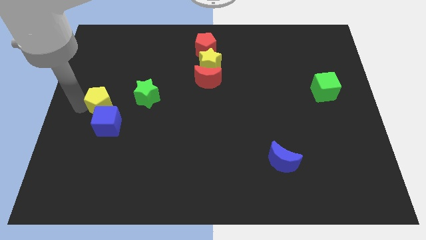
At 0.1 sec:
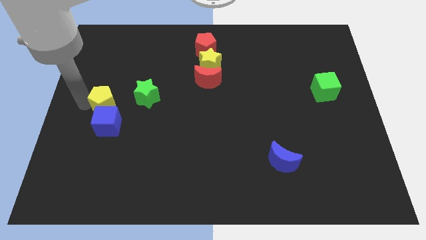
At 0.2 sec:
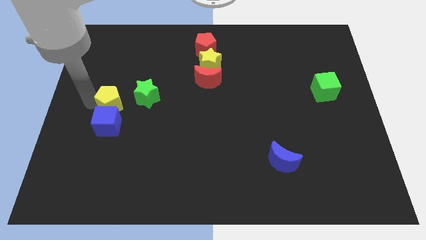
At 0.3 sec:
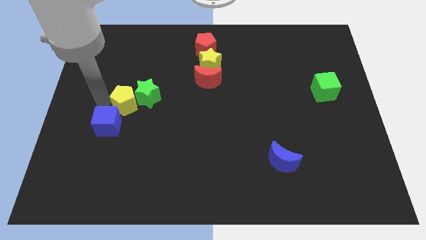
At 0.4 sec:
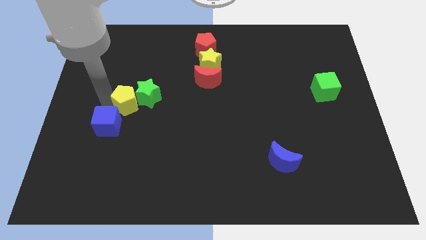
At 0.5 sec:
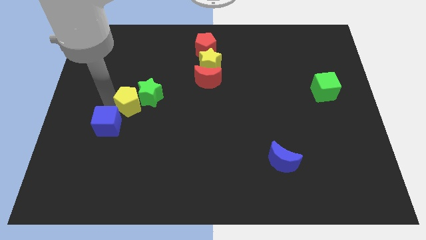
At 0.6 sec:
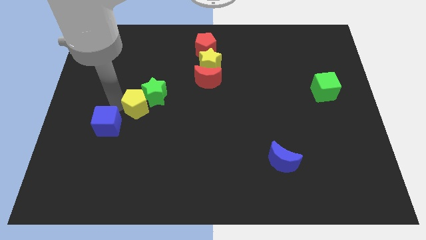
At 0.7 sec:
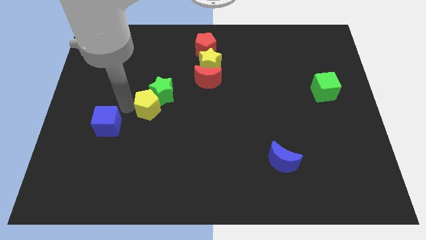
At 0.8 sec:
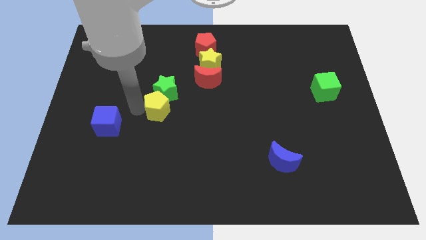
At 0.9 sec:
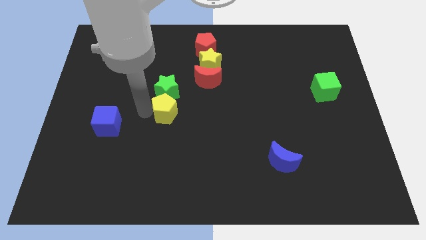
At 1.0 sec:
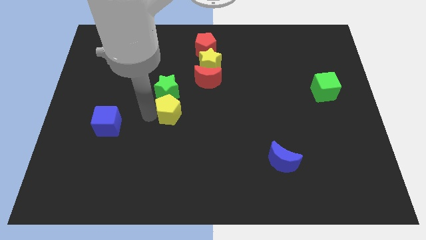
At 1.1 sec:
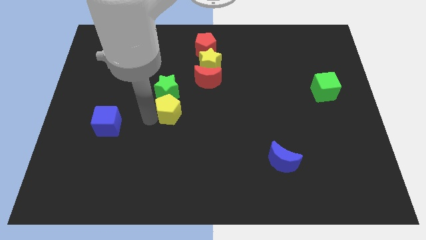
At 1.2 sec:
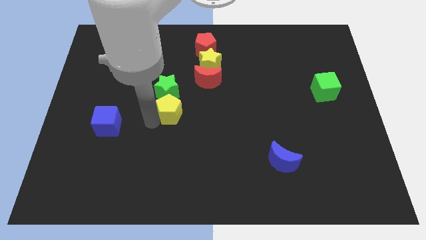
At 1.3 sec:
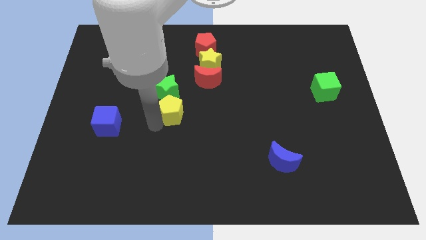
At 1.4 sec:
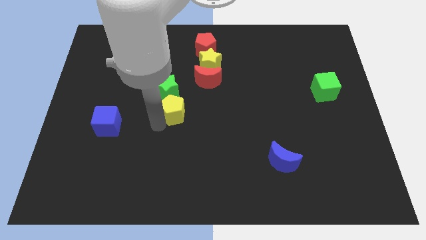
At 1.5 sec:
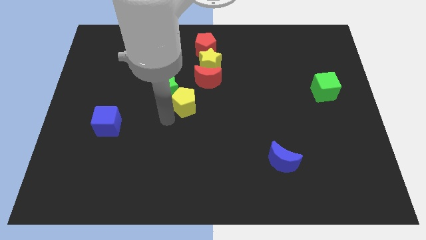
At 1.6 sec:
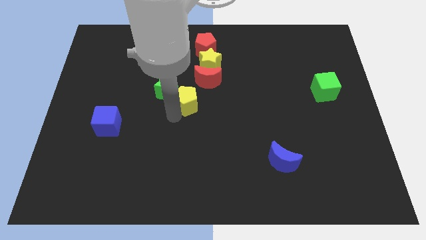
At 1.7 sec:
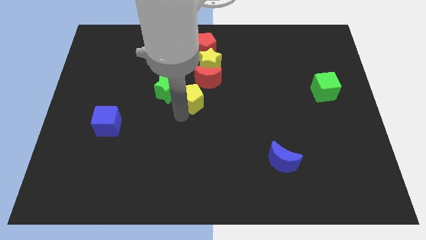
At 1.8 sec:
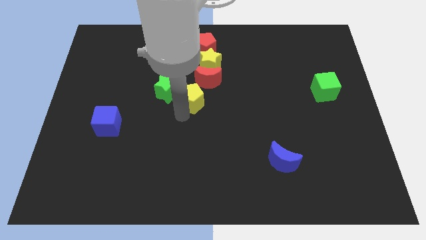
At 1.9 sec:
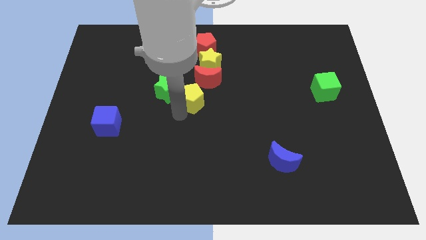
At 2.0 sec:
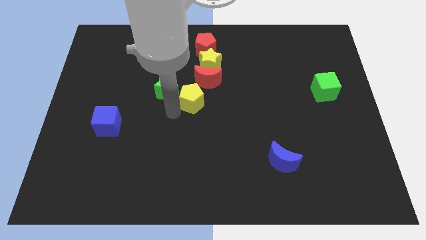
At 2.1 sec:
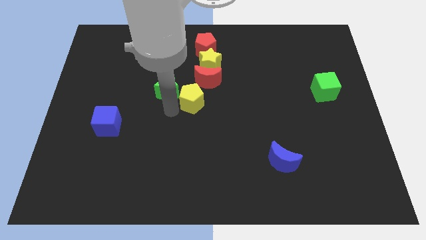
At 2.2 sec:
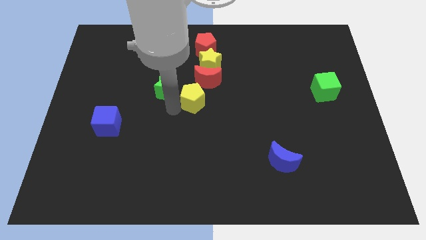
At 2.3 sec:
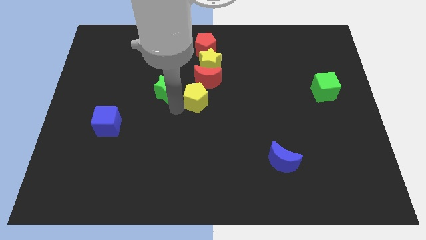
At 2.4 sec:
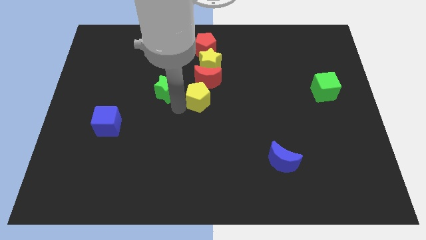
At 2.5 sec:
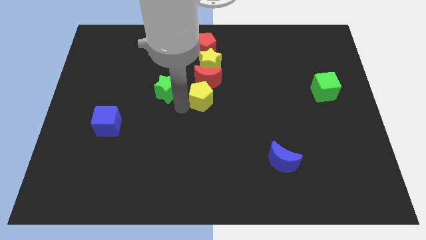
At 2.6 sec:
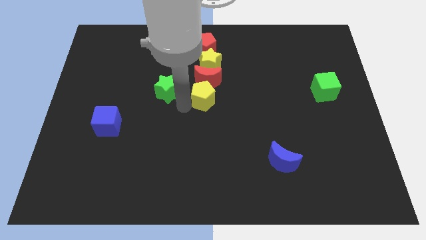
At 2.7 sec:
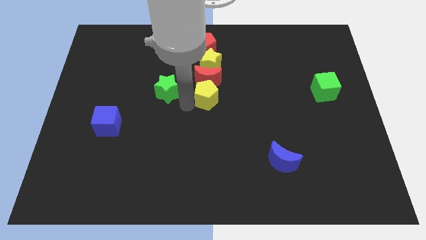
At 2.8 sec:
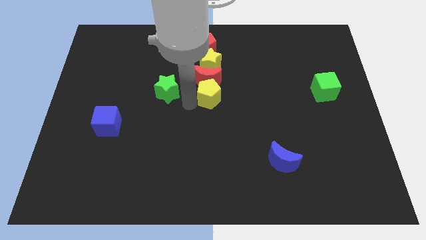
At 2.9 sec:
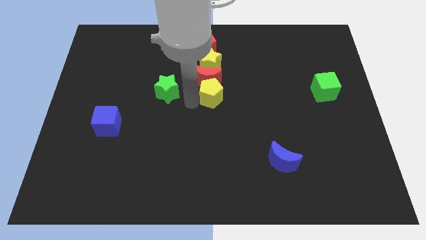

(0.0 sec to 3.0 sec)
drag the yellow pentagon to the bottom side of the red moon

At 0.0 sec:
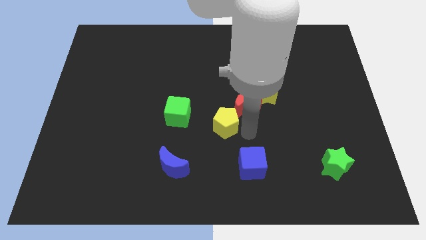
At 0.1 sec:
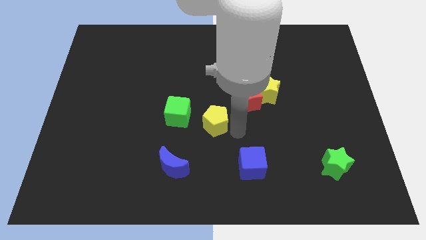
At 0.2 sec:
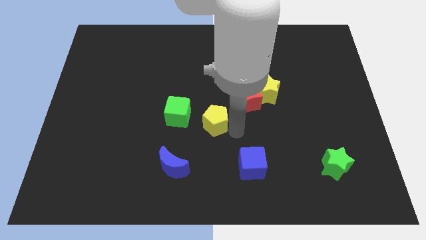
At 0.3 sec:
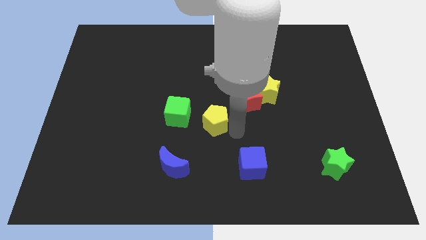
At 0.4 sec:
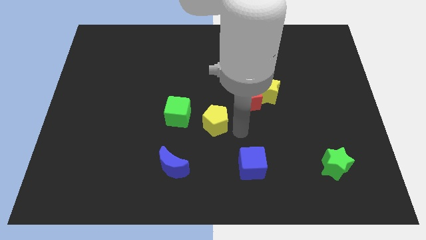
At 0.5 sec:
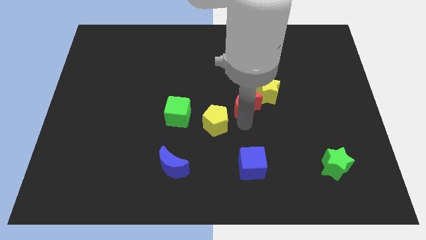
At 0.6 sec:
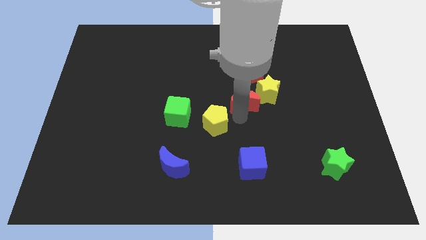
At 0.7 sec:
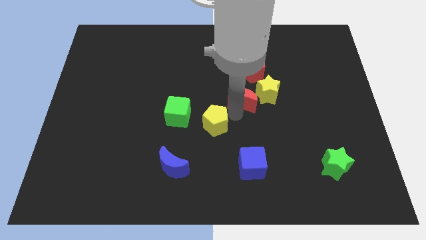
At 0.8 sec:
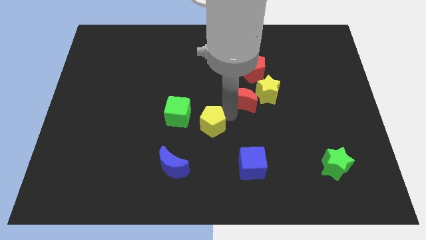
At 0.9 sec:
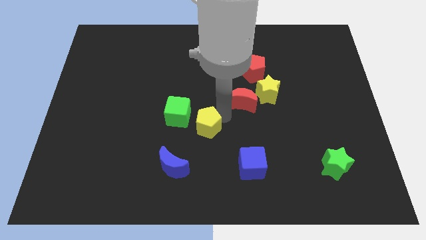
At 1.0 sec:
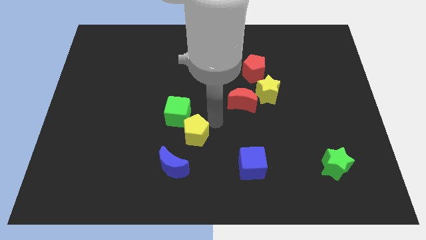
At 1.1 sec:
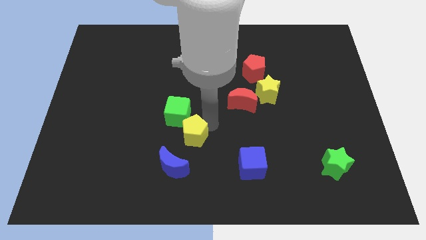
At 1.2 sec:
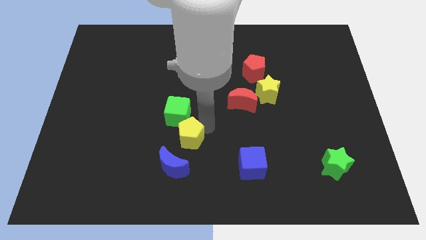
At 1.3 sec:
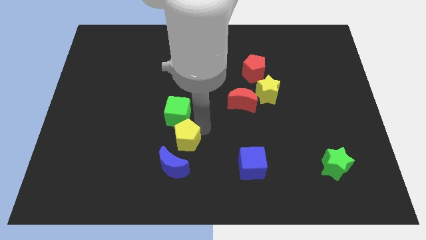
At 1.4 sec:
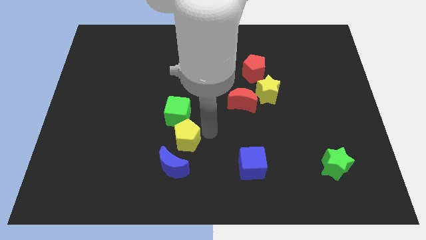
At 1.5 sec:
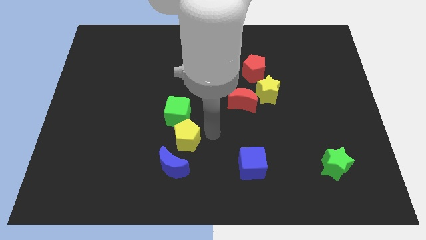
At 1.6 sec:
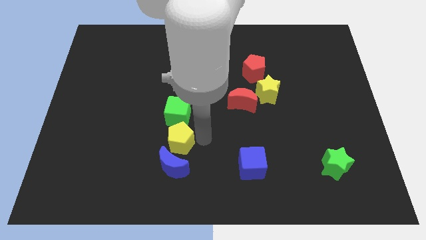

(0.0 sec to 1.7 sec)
move the yellow pentagon below the green cube

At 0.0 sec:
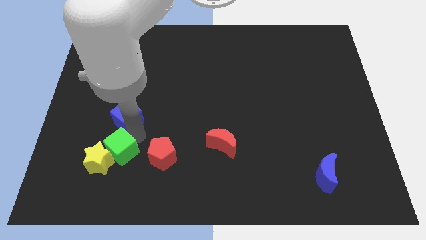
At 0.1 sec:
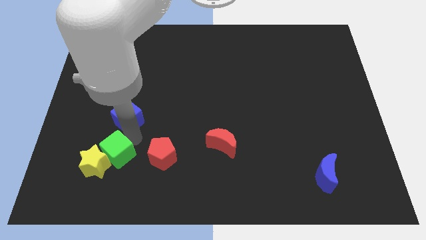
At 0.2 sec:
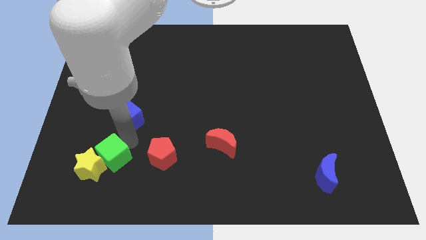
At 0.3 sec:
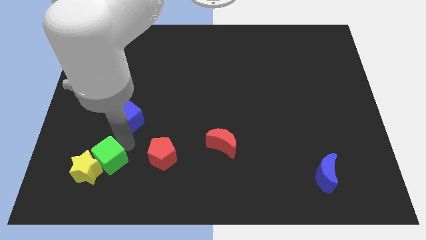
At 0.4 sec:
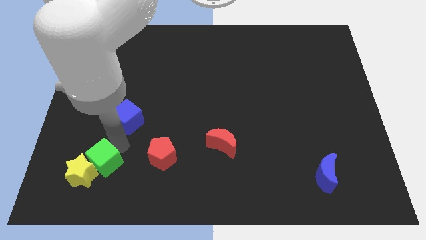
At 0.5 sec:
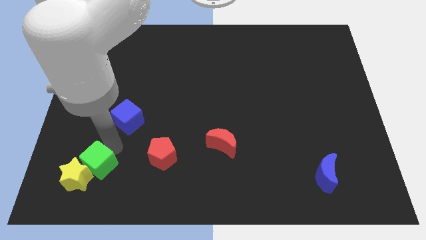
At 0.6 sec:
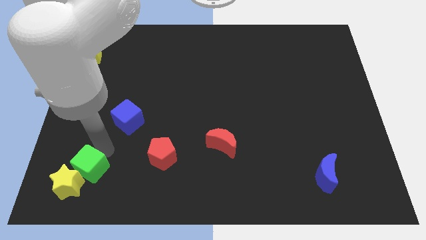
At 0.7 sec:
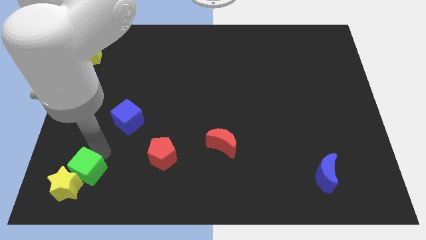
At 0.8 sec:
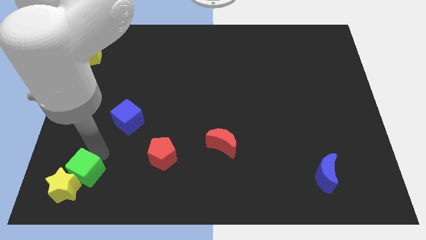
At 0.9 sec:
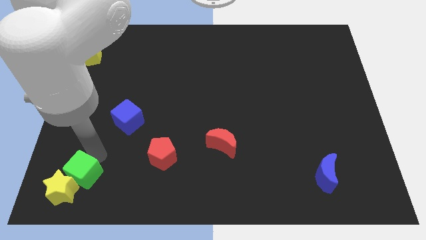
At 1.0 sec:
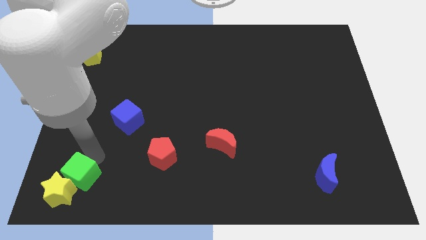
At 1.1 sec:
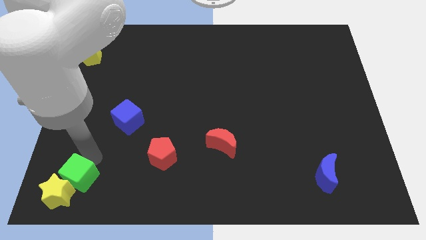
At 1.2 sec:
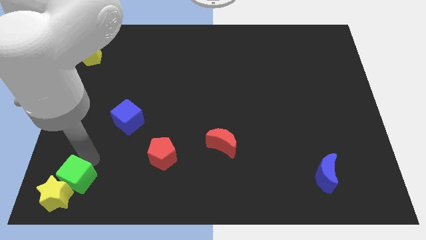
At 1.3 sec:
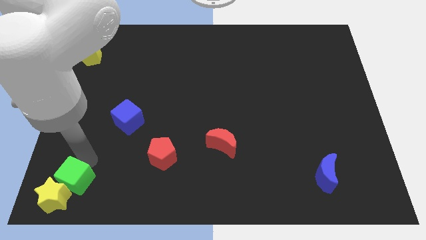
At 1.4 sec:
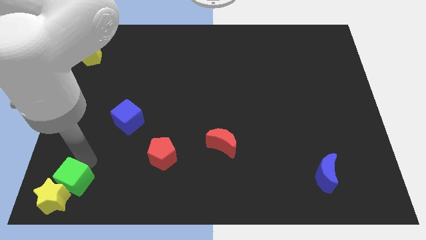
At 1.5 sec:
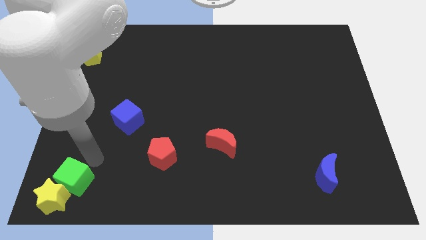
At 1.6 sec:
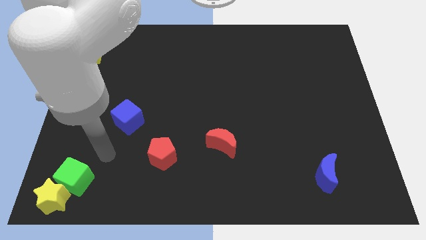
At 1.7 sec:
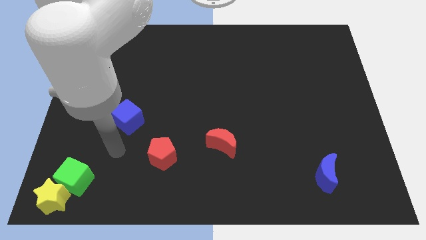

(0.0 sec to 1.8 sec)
move green cube and yellow star towards left bottom corner of the board

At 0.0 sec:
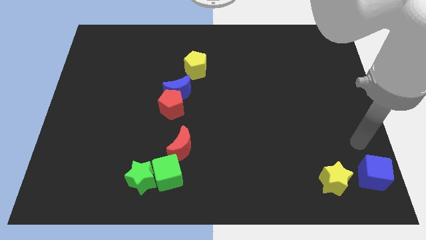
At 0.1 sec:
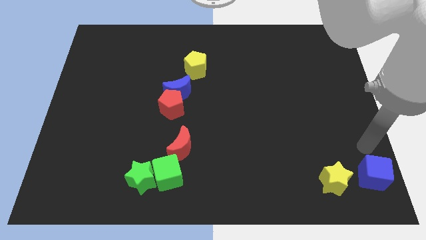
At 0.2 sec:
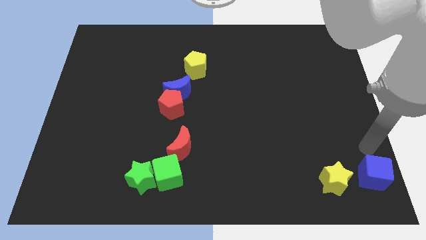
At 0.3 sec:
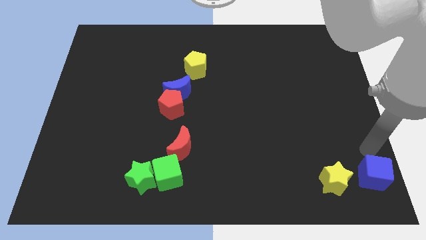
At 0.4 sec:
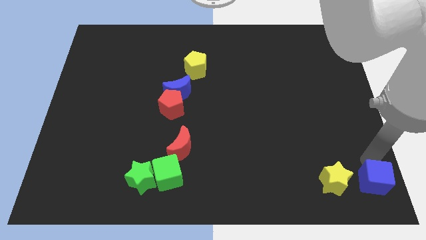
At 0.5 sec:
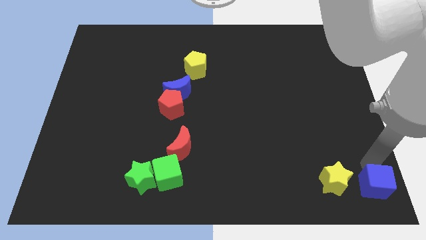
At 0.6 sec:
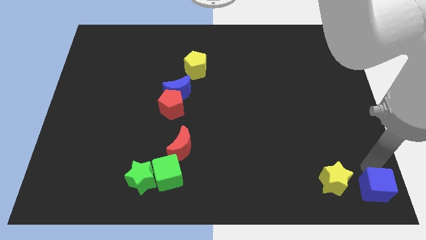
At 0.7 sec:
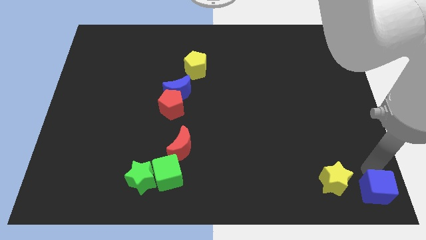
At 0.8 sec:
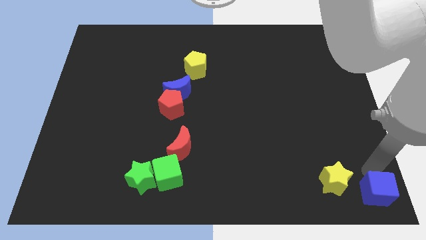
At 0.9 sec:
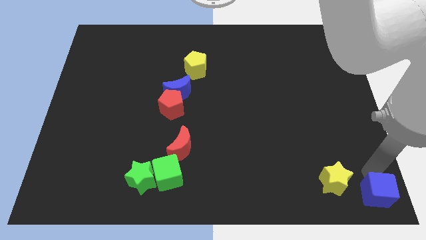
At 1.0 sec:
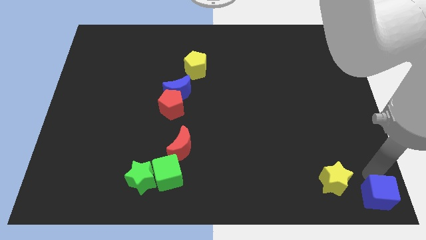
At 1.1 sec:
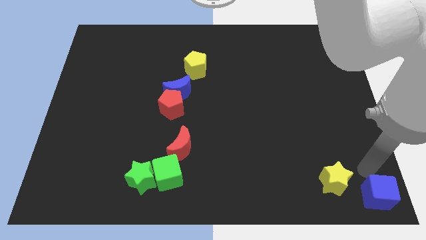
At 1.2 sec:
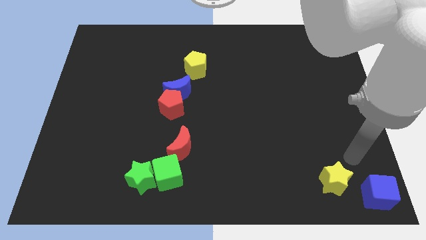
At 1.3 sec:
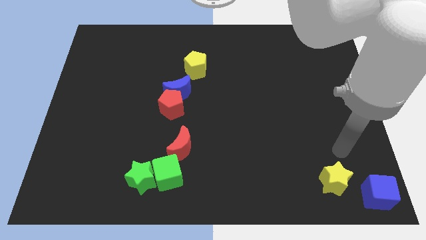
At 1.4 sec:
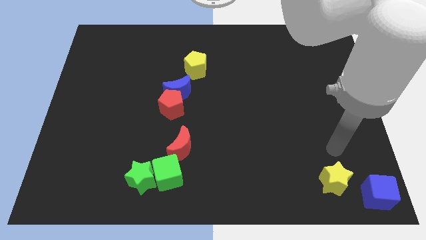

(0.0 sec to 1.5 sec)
push the blue cube to the bottom right corner of the board

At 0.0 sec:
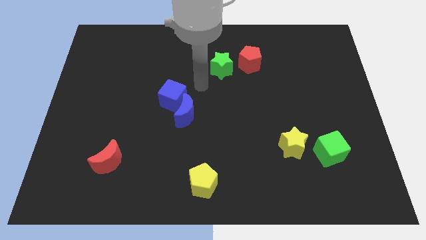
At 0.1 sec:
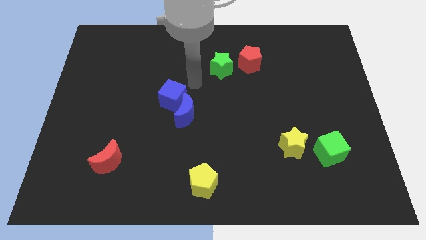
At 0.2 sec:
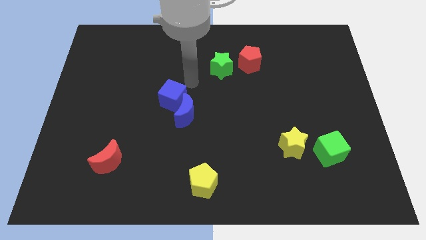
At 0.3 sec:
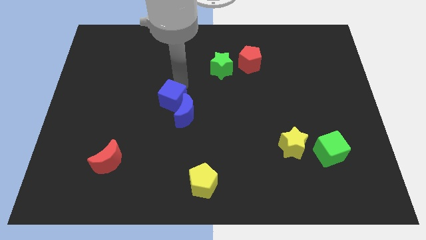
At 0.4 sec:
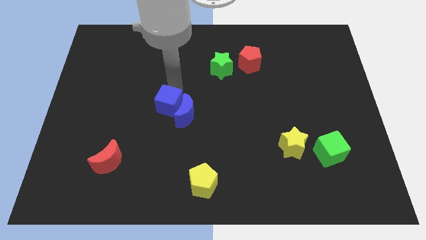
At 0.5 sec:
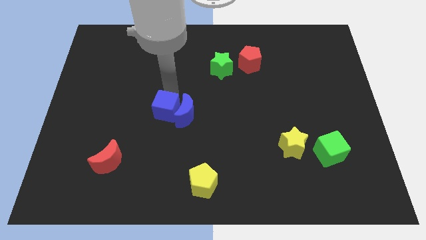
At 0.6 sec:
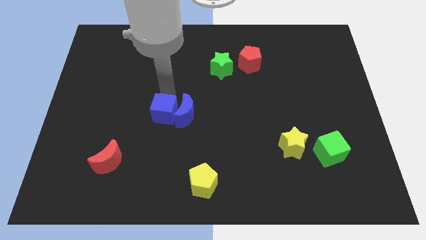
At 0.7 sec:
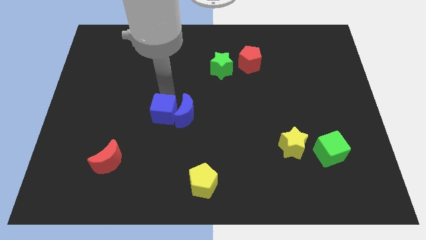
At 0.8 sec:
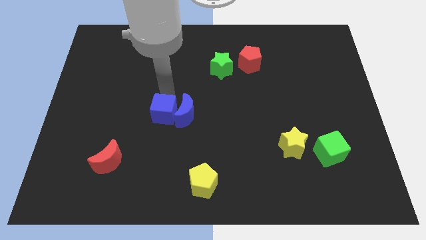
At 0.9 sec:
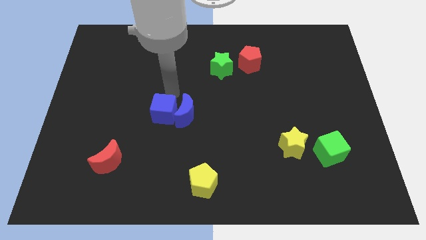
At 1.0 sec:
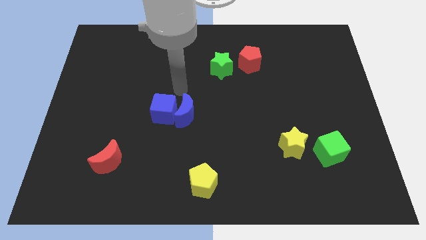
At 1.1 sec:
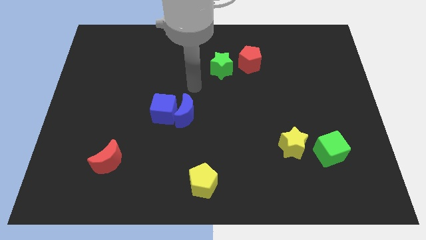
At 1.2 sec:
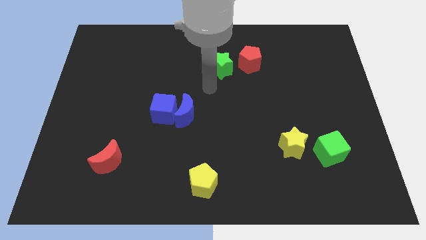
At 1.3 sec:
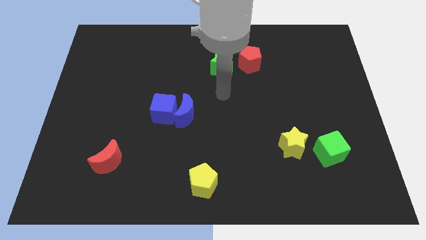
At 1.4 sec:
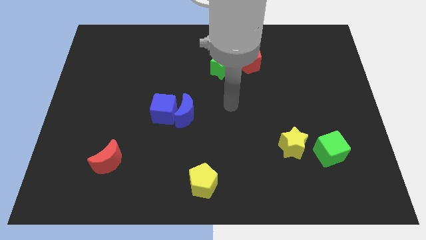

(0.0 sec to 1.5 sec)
move the blue cube to the left side of the blue moon
